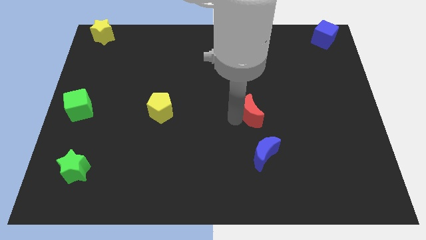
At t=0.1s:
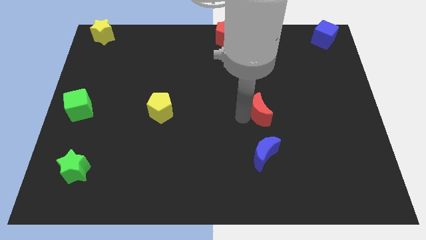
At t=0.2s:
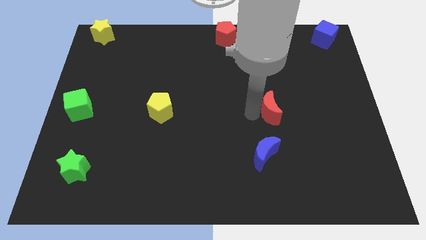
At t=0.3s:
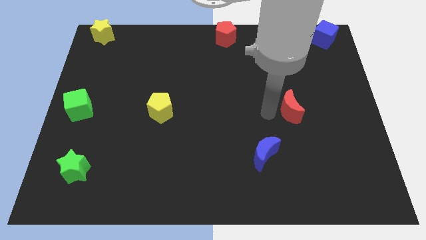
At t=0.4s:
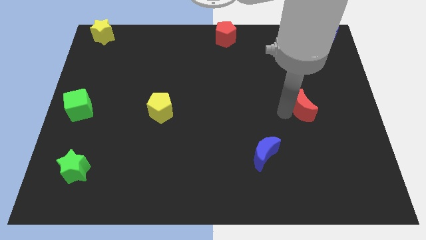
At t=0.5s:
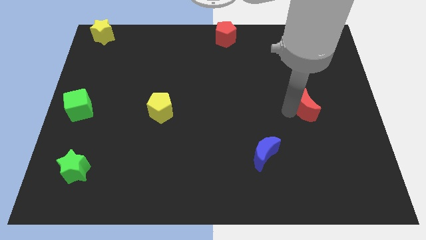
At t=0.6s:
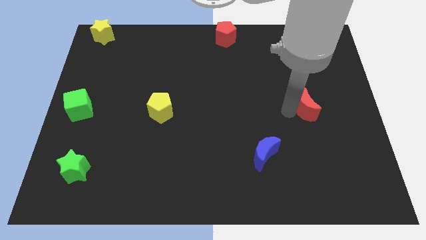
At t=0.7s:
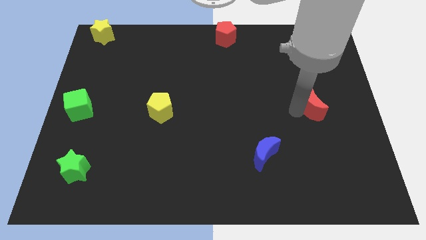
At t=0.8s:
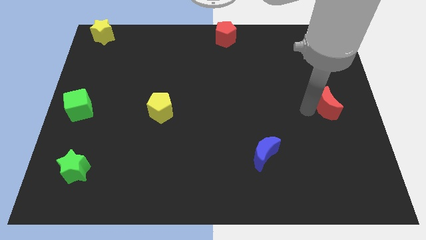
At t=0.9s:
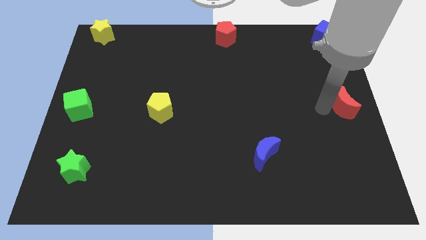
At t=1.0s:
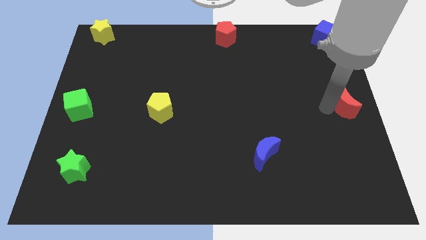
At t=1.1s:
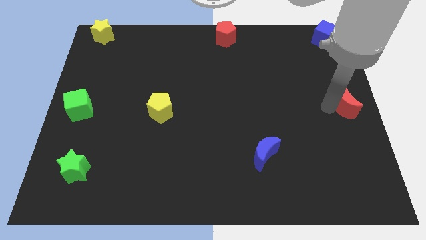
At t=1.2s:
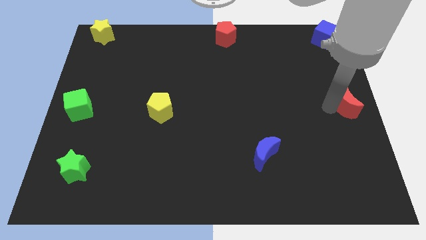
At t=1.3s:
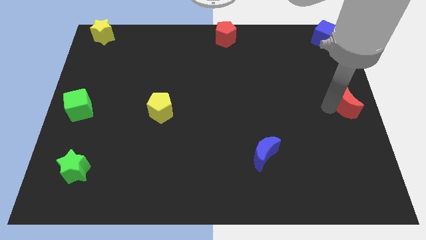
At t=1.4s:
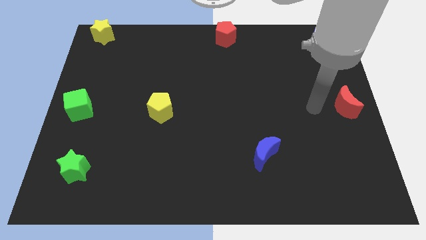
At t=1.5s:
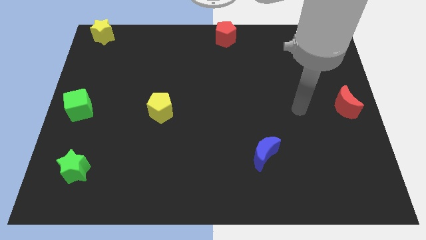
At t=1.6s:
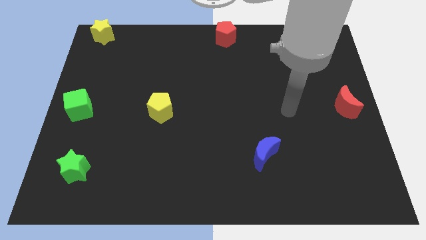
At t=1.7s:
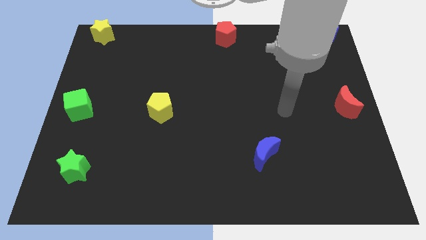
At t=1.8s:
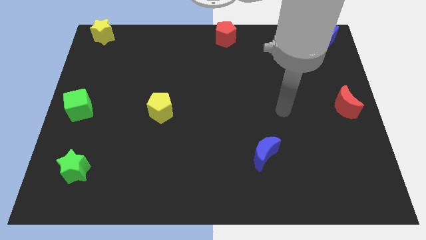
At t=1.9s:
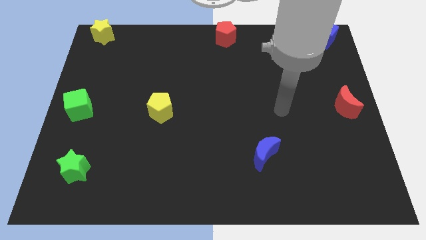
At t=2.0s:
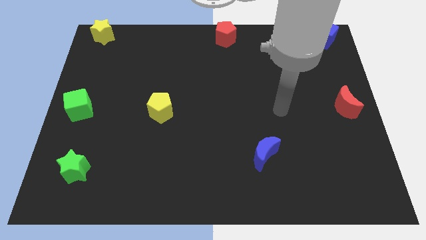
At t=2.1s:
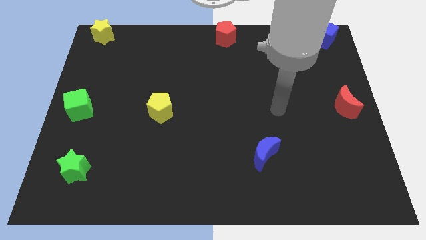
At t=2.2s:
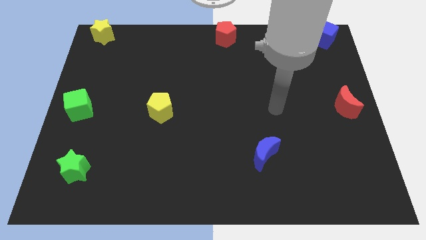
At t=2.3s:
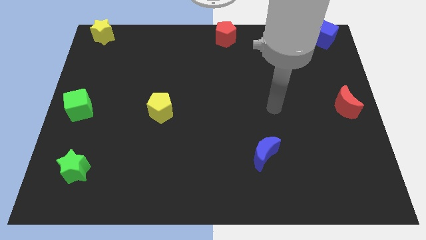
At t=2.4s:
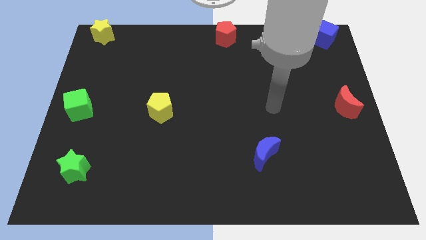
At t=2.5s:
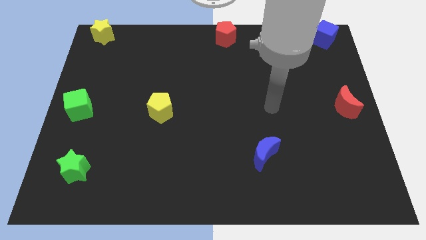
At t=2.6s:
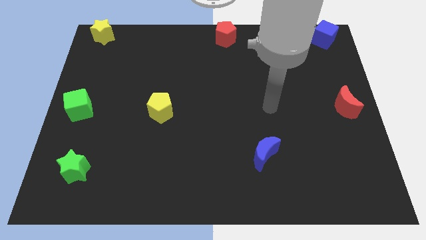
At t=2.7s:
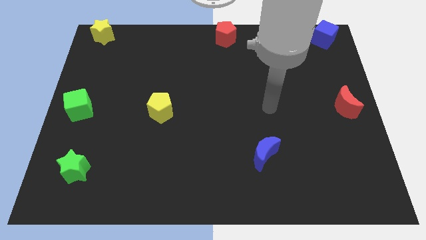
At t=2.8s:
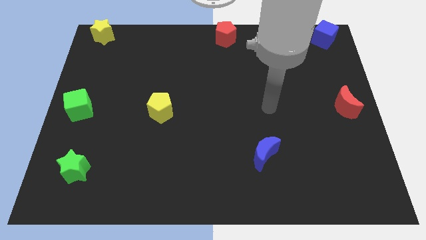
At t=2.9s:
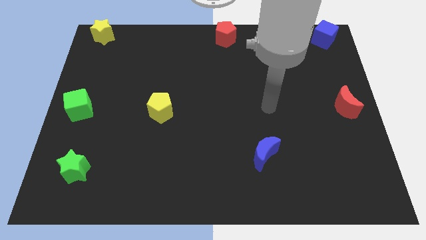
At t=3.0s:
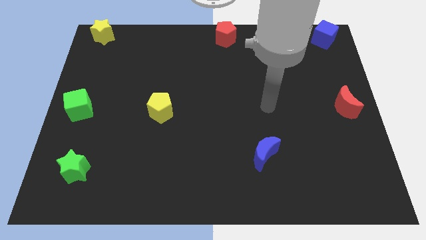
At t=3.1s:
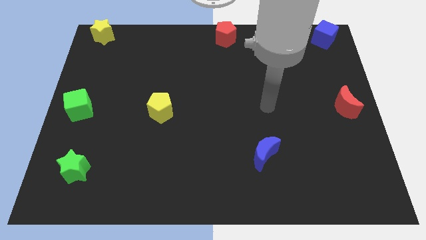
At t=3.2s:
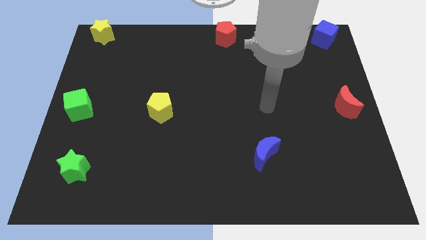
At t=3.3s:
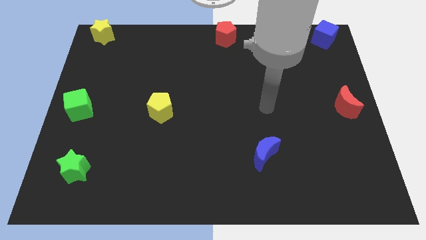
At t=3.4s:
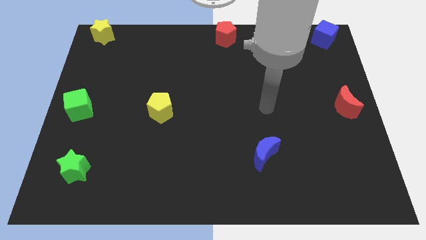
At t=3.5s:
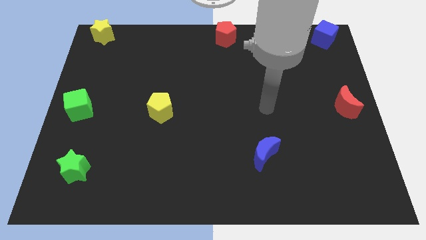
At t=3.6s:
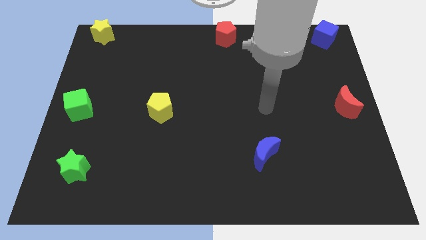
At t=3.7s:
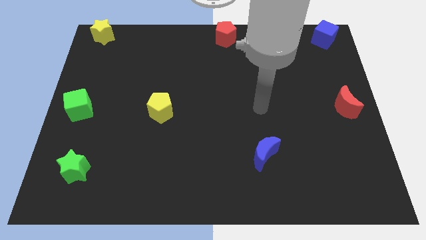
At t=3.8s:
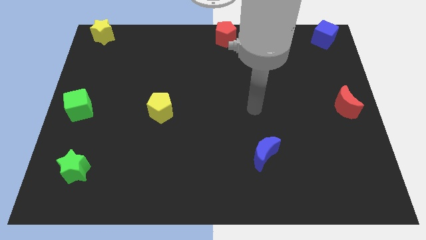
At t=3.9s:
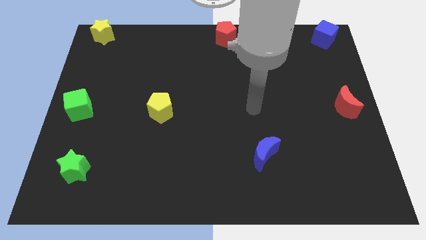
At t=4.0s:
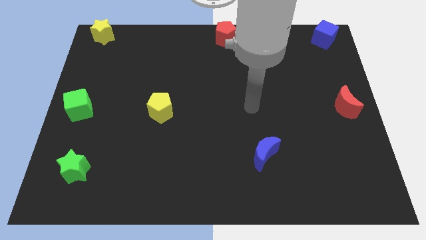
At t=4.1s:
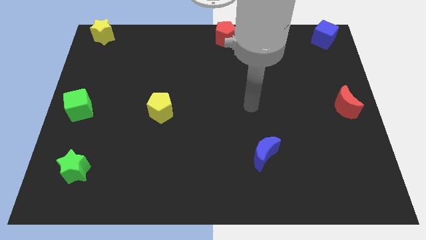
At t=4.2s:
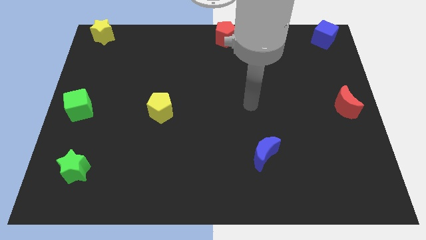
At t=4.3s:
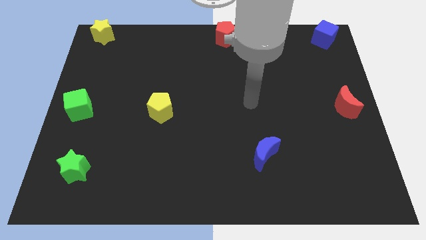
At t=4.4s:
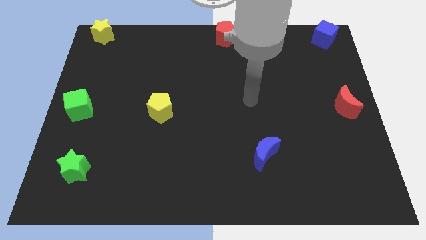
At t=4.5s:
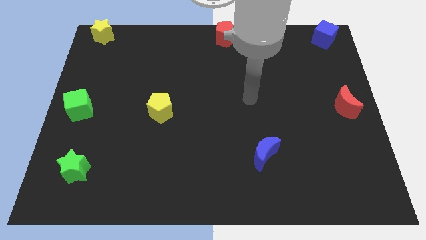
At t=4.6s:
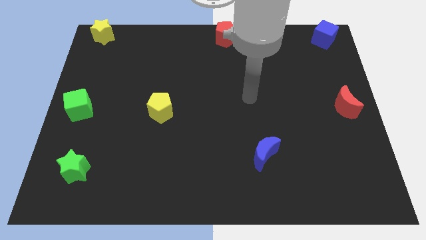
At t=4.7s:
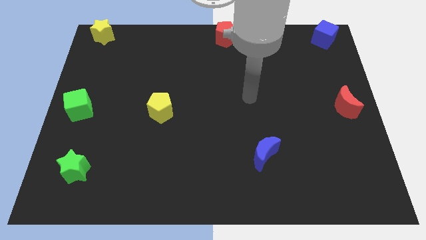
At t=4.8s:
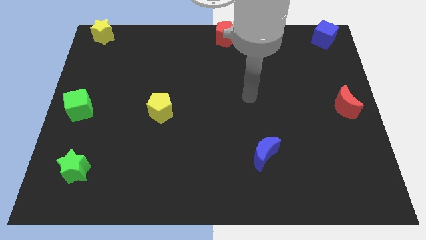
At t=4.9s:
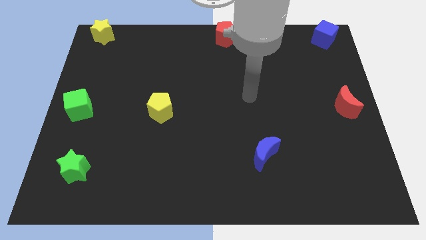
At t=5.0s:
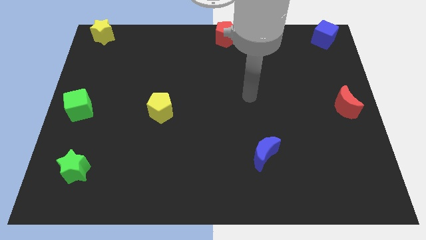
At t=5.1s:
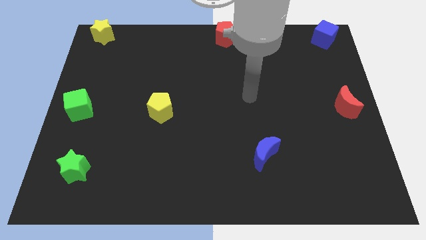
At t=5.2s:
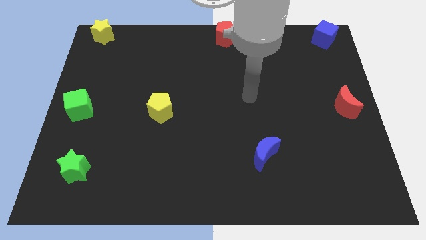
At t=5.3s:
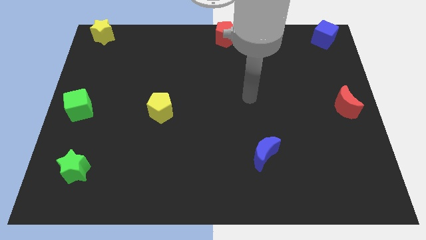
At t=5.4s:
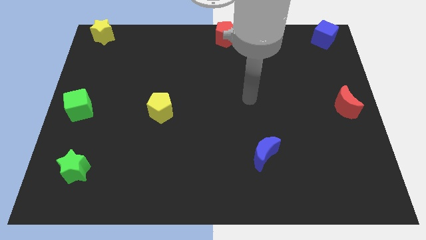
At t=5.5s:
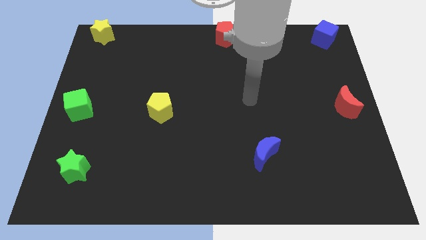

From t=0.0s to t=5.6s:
push red crescent to the right center

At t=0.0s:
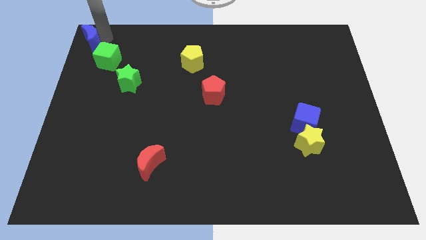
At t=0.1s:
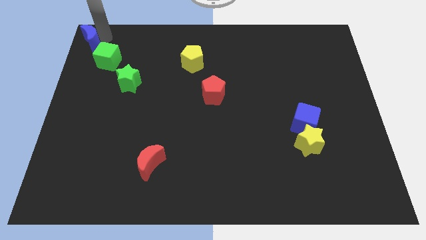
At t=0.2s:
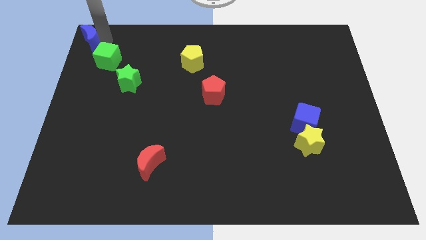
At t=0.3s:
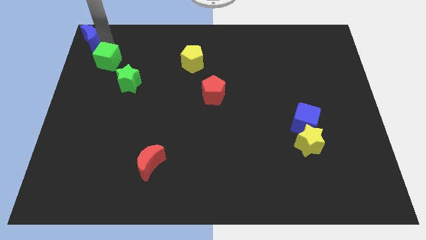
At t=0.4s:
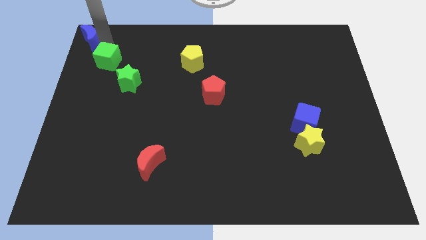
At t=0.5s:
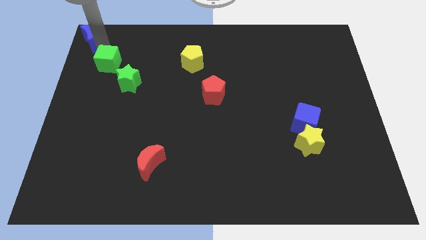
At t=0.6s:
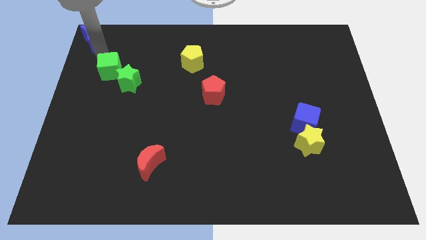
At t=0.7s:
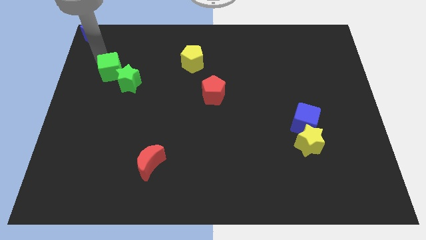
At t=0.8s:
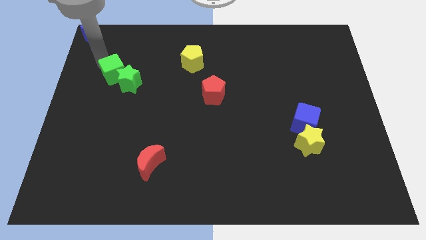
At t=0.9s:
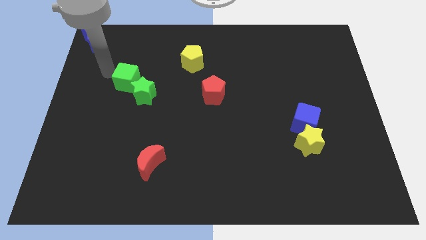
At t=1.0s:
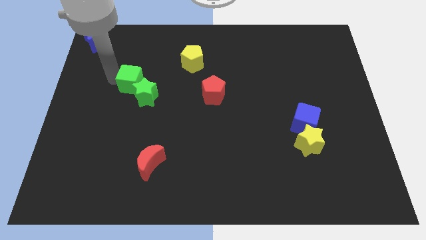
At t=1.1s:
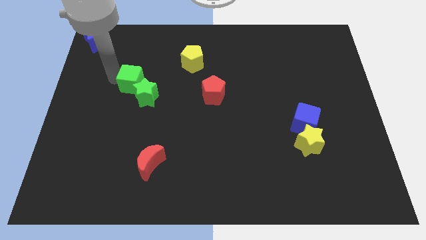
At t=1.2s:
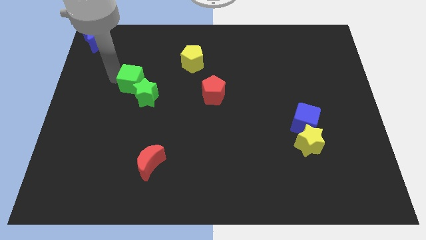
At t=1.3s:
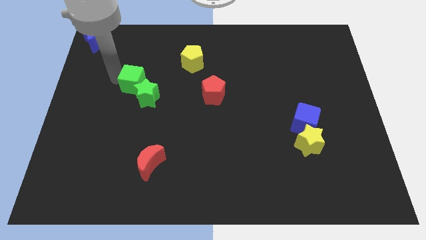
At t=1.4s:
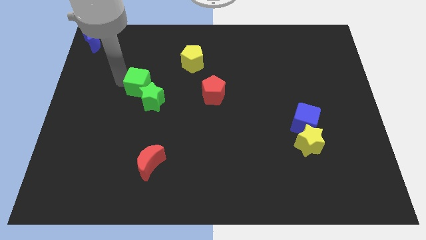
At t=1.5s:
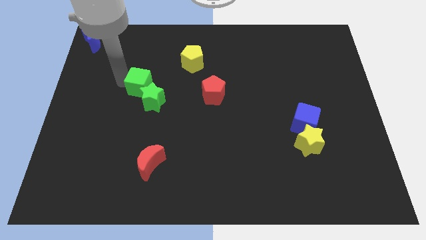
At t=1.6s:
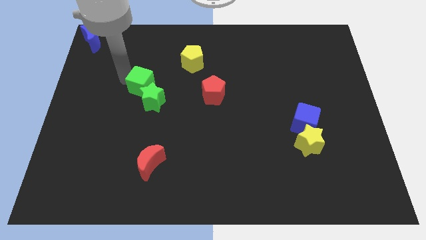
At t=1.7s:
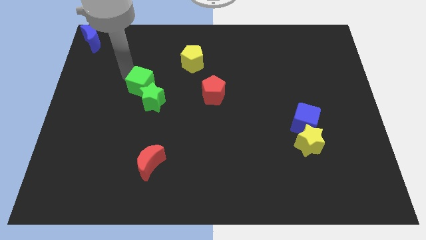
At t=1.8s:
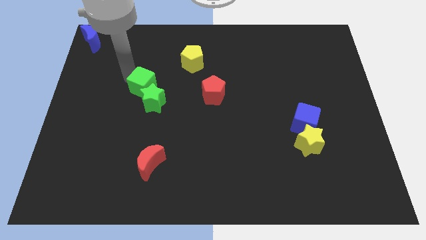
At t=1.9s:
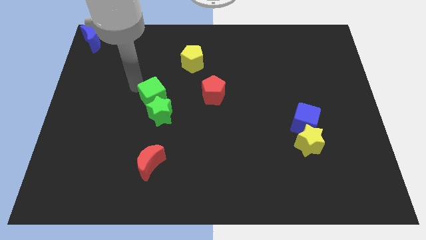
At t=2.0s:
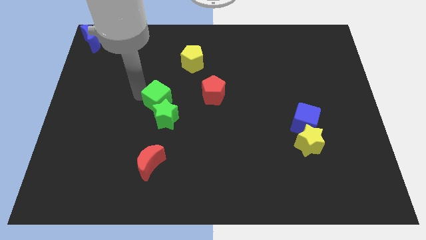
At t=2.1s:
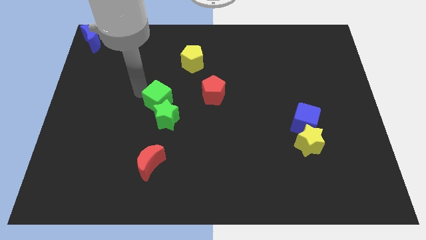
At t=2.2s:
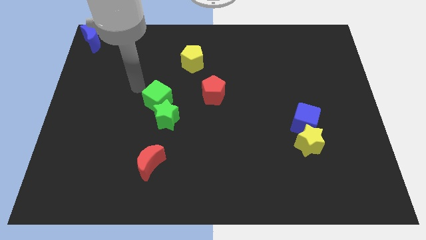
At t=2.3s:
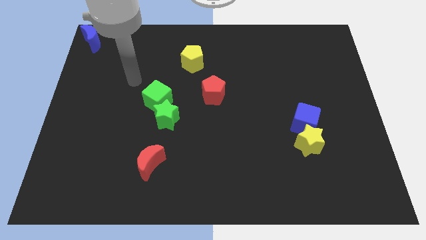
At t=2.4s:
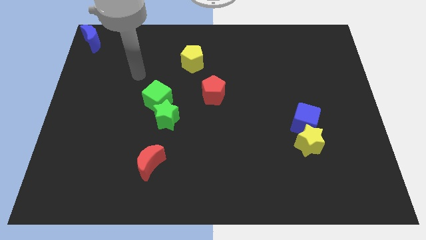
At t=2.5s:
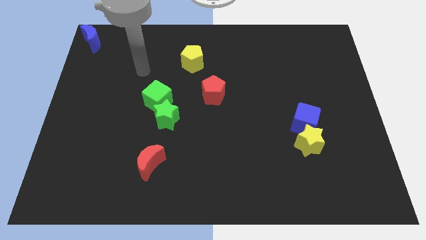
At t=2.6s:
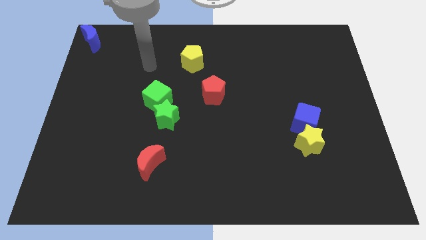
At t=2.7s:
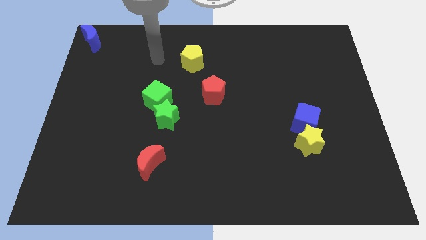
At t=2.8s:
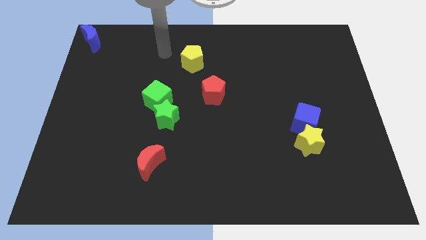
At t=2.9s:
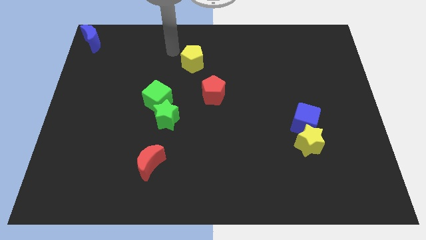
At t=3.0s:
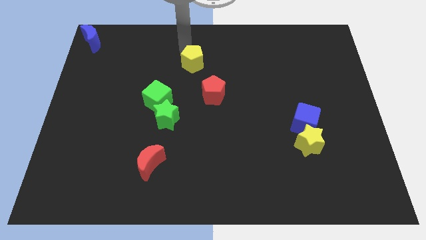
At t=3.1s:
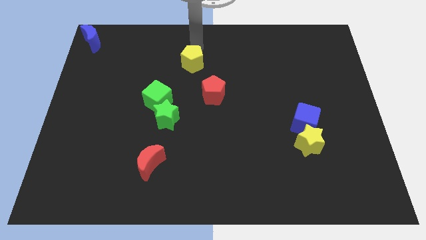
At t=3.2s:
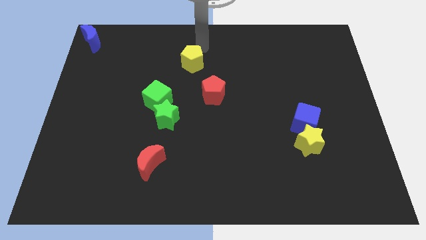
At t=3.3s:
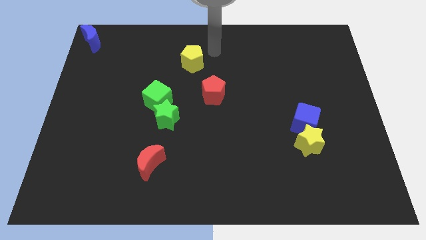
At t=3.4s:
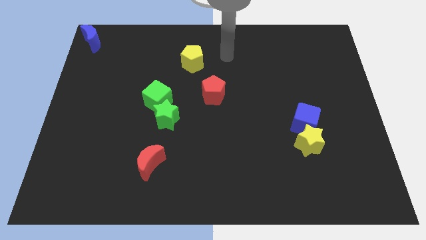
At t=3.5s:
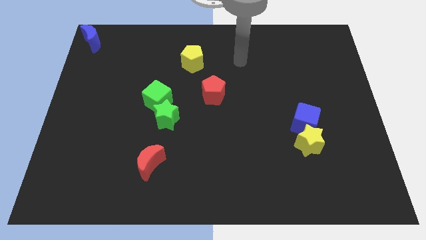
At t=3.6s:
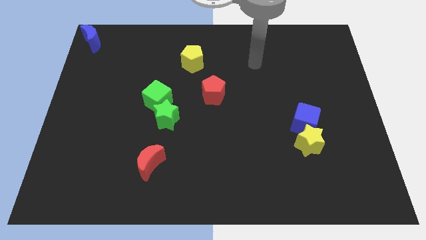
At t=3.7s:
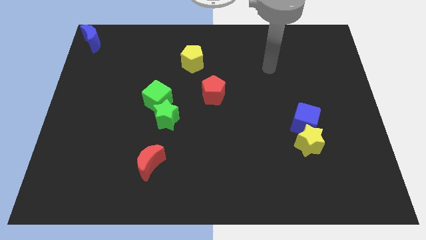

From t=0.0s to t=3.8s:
place the green cube below the yellow pentagon
